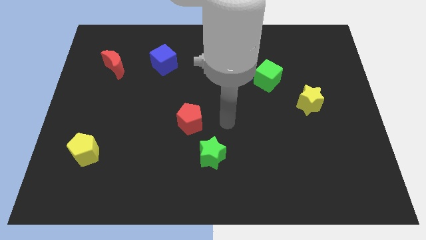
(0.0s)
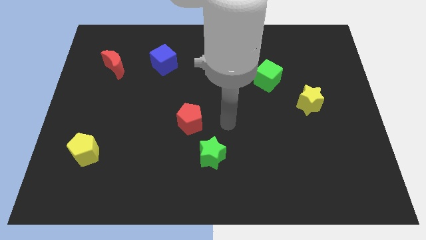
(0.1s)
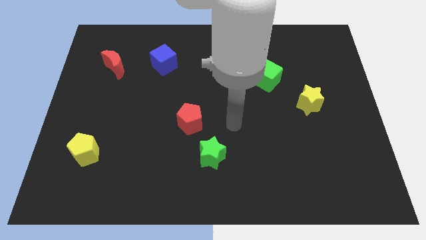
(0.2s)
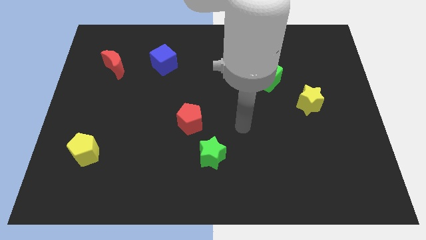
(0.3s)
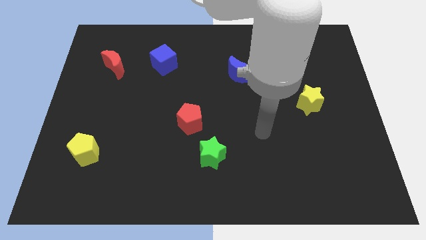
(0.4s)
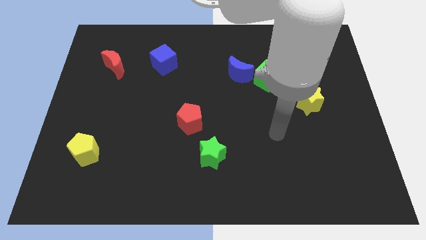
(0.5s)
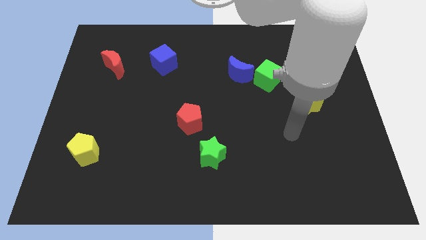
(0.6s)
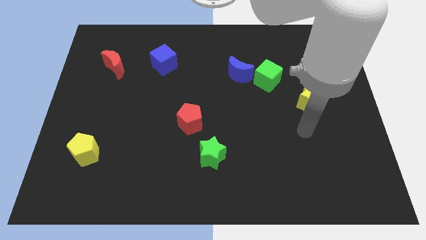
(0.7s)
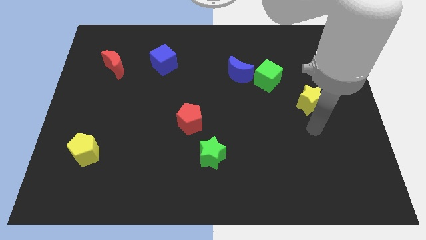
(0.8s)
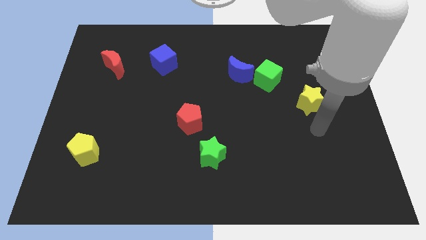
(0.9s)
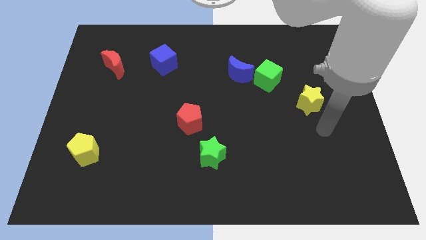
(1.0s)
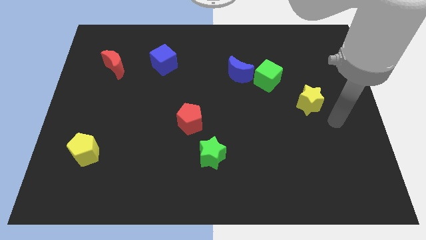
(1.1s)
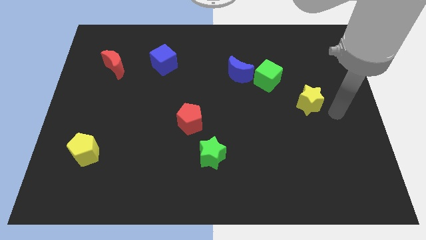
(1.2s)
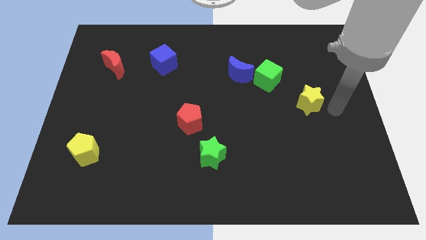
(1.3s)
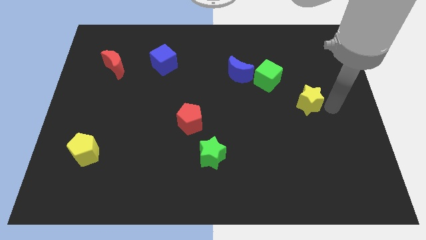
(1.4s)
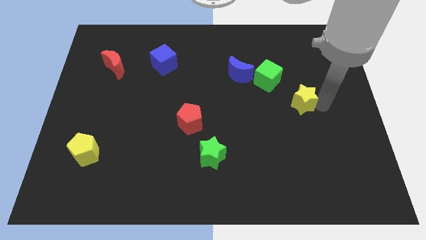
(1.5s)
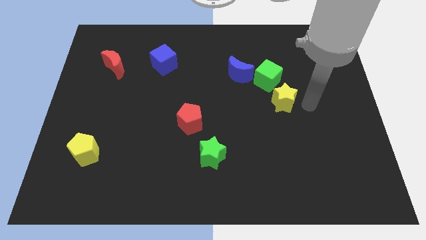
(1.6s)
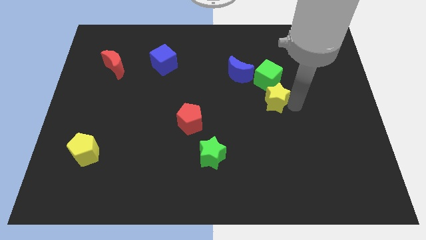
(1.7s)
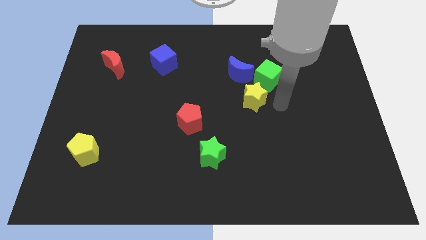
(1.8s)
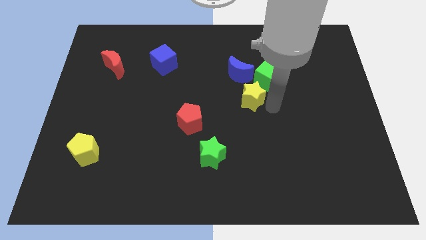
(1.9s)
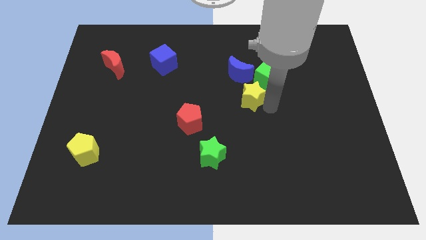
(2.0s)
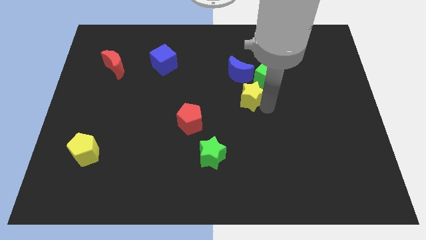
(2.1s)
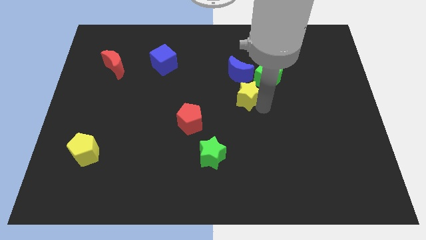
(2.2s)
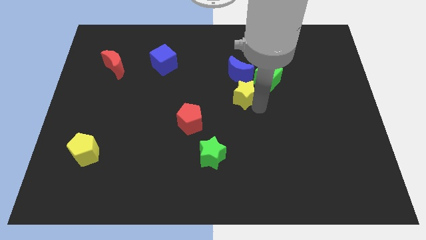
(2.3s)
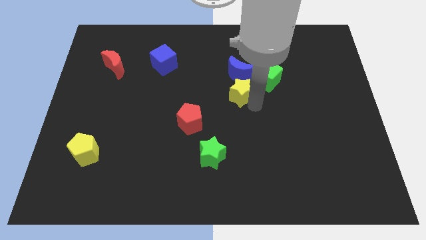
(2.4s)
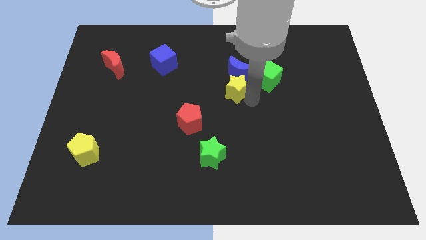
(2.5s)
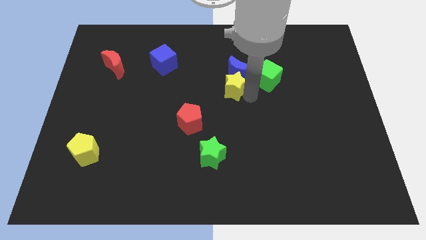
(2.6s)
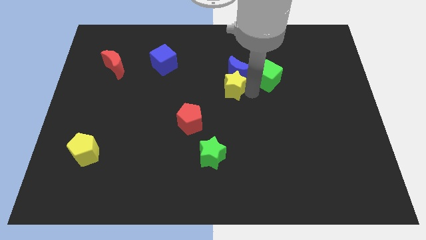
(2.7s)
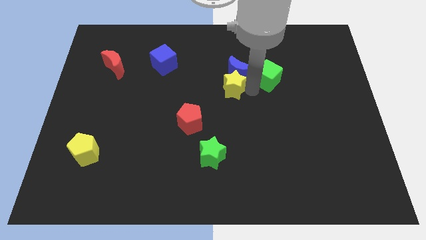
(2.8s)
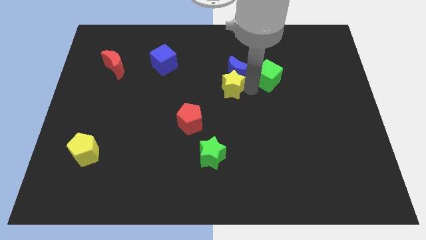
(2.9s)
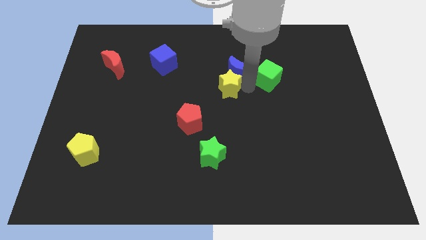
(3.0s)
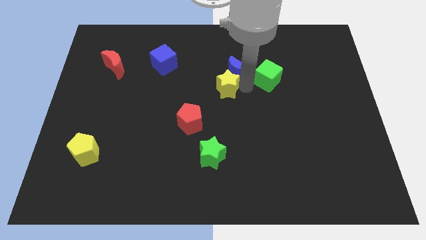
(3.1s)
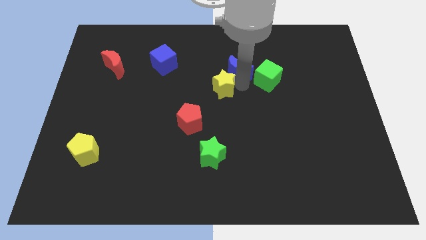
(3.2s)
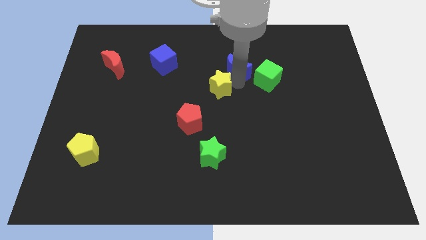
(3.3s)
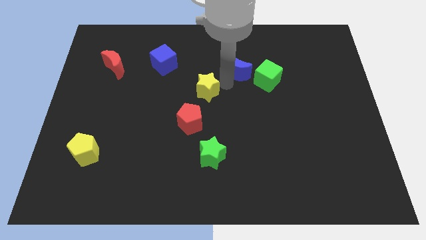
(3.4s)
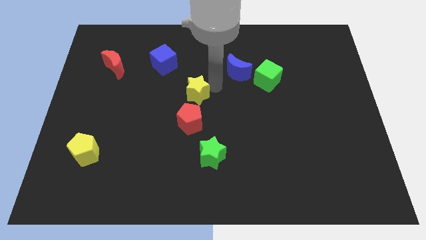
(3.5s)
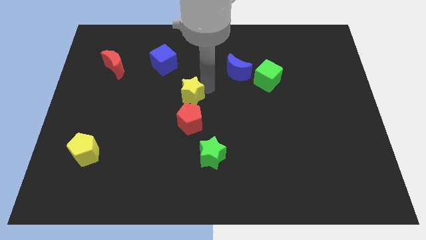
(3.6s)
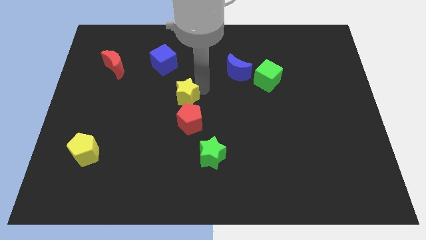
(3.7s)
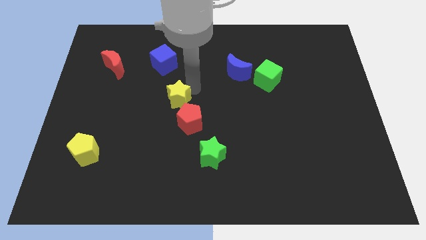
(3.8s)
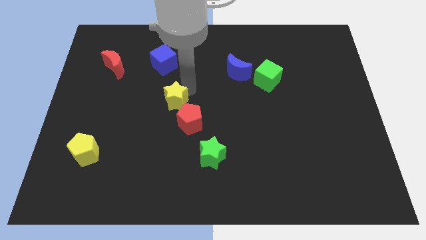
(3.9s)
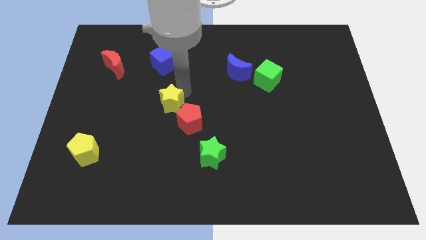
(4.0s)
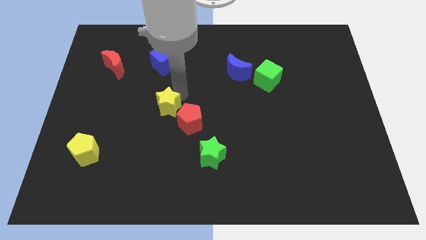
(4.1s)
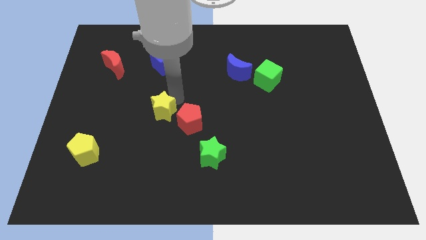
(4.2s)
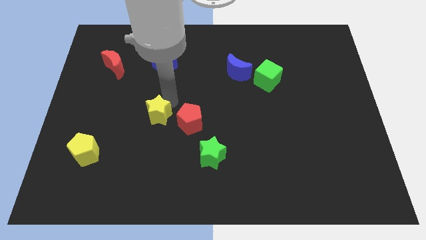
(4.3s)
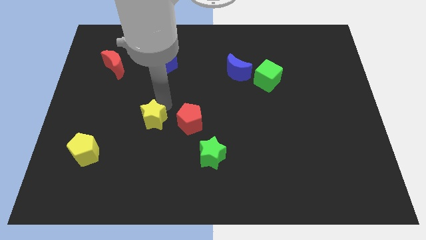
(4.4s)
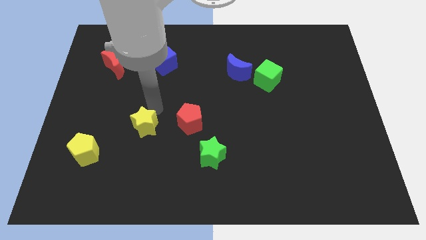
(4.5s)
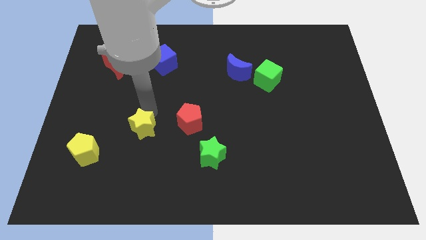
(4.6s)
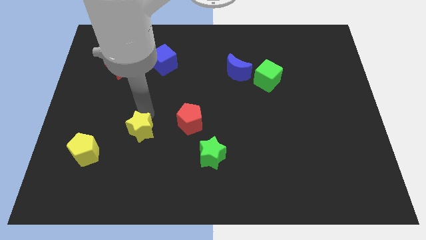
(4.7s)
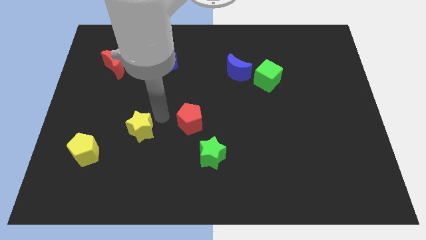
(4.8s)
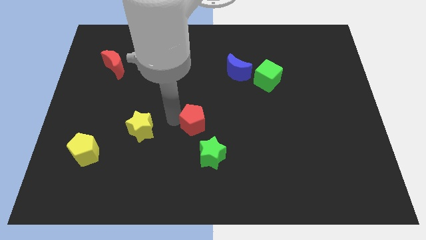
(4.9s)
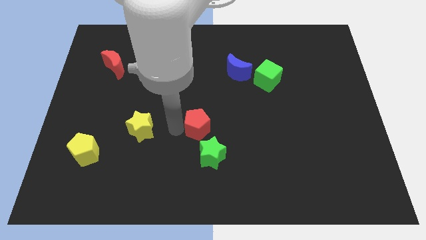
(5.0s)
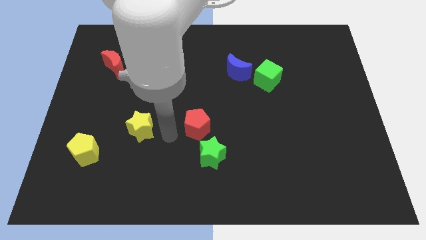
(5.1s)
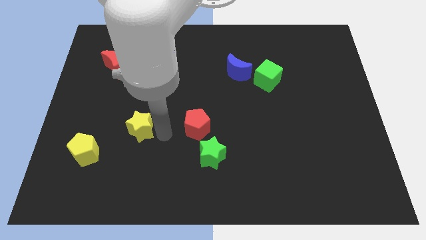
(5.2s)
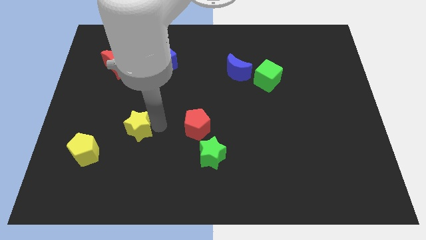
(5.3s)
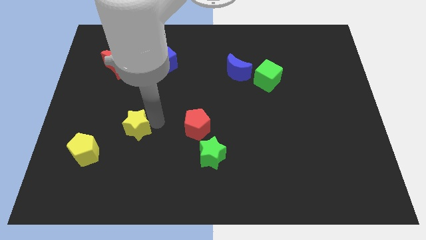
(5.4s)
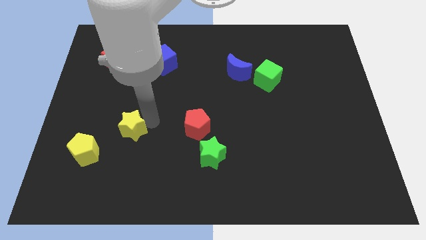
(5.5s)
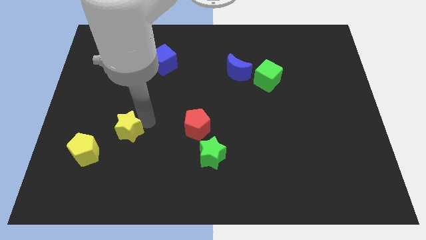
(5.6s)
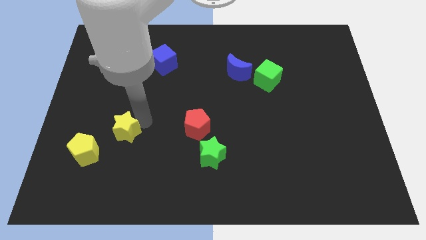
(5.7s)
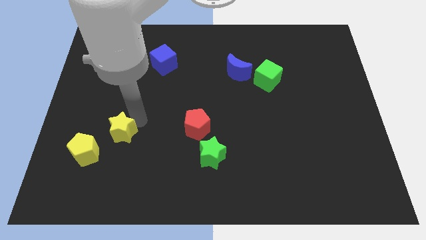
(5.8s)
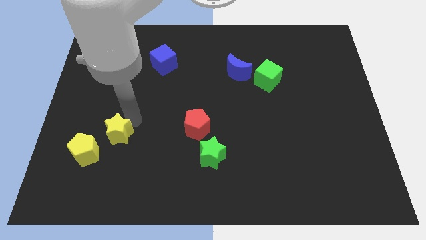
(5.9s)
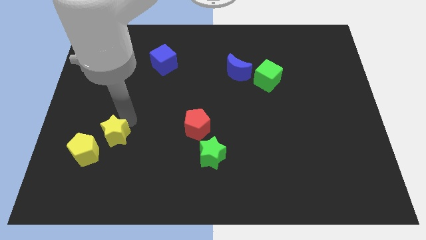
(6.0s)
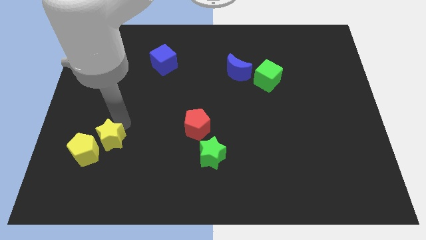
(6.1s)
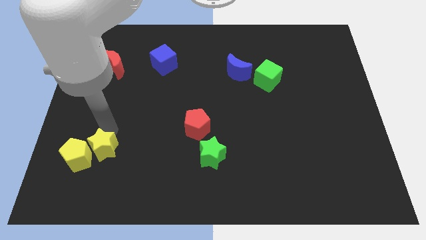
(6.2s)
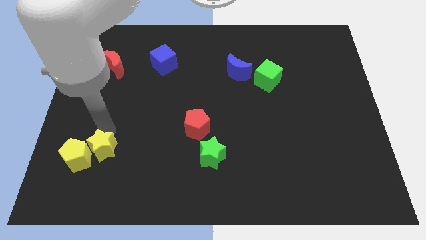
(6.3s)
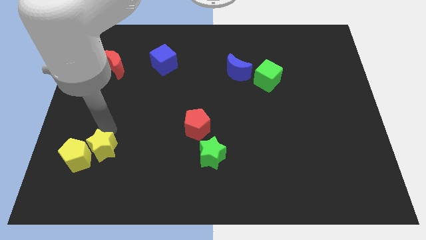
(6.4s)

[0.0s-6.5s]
move the yellow star next to the yellow pentagon

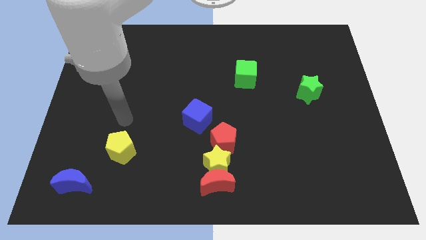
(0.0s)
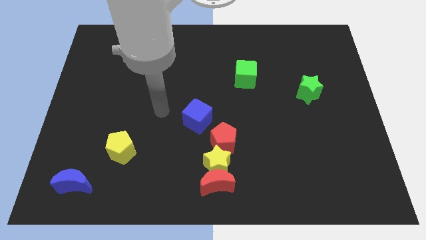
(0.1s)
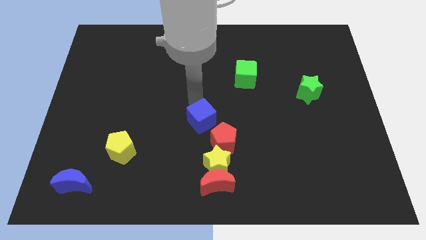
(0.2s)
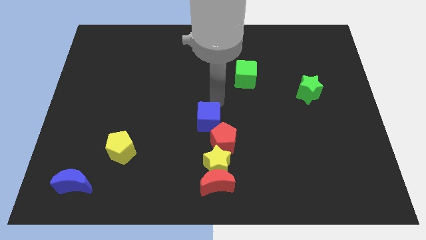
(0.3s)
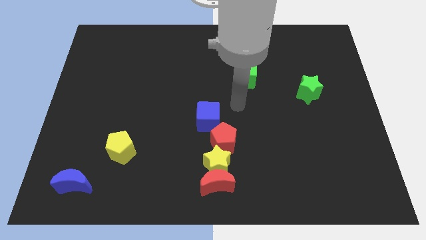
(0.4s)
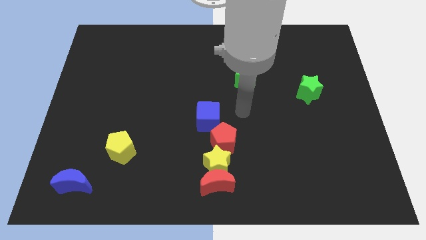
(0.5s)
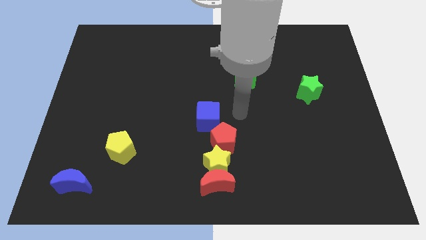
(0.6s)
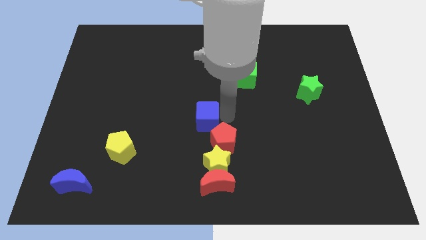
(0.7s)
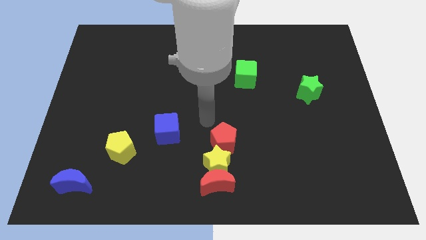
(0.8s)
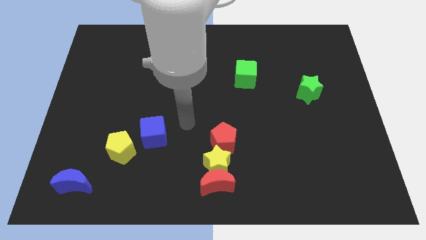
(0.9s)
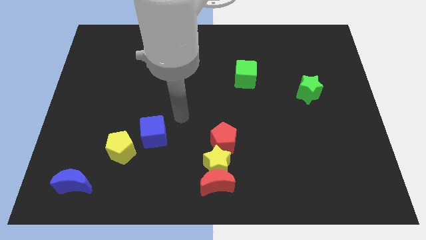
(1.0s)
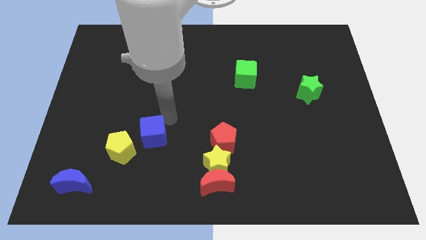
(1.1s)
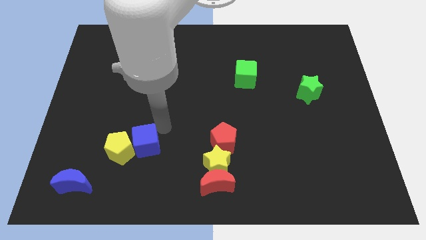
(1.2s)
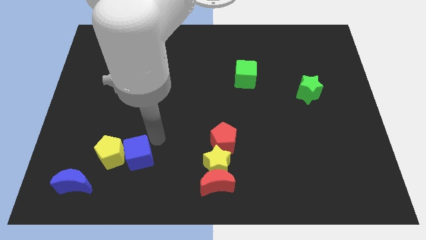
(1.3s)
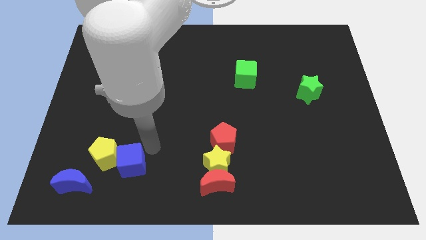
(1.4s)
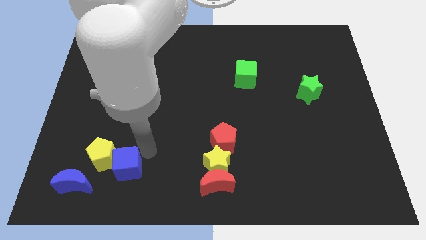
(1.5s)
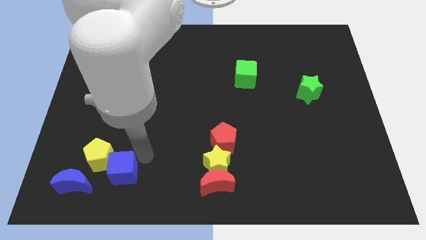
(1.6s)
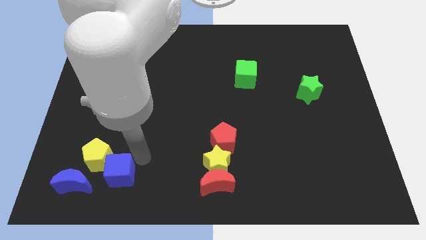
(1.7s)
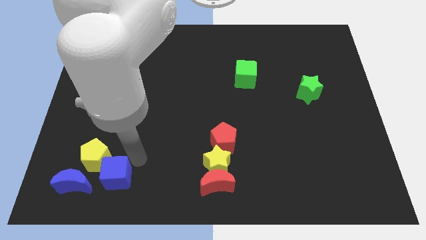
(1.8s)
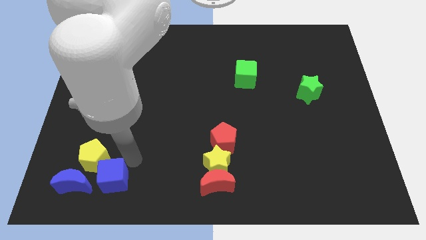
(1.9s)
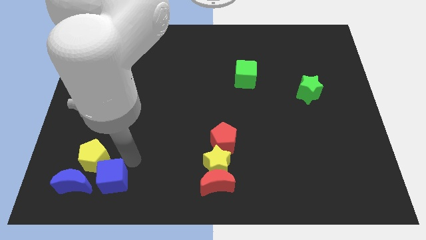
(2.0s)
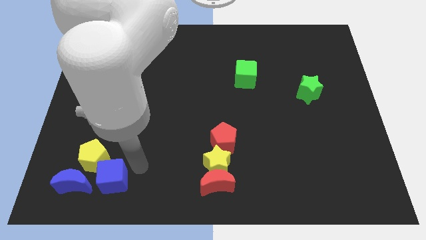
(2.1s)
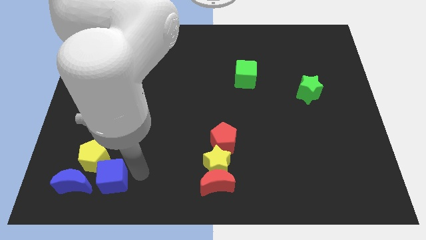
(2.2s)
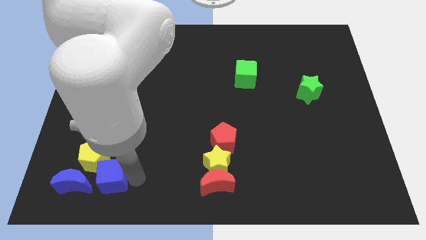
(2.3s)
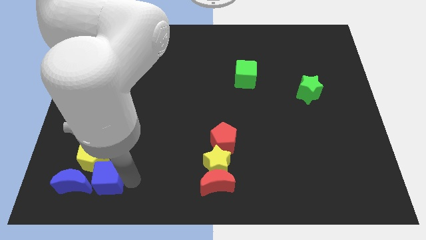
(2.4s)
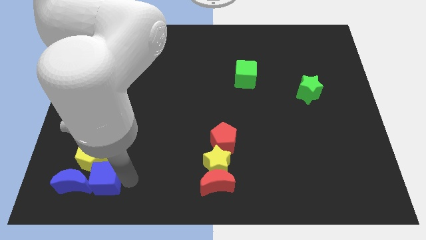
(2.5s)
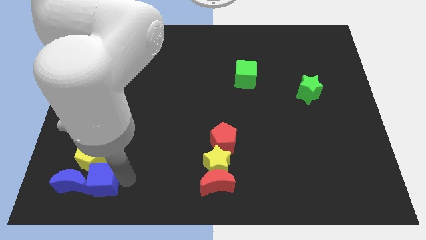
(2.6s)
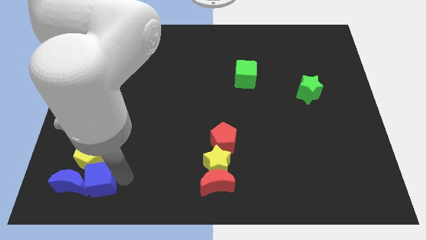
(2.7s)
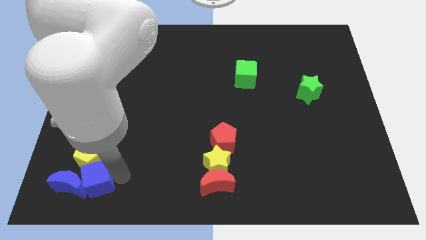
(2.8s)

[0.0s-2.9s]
move the blue cube to the blue moon
